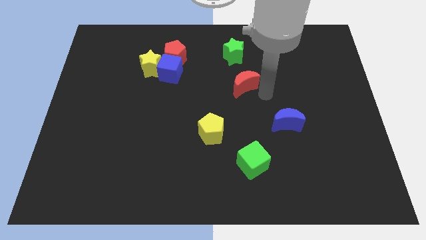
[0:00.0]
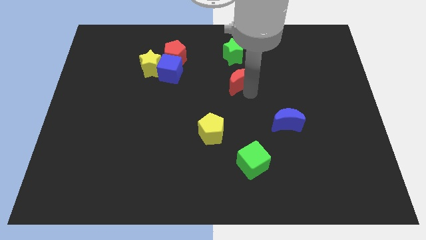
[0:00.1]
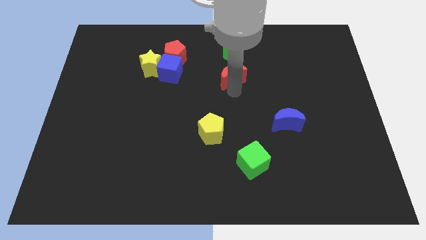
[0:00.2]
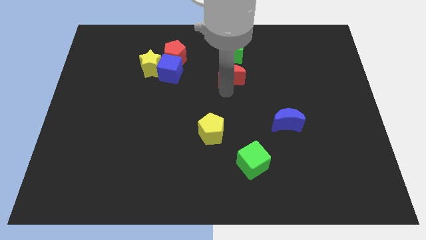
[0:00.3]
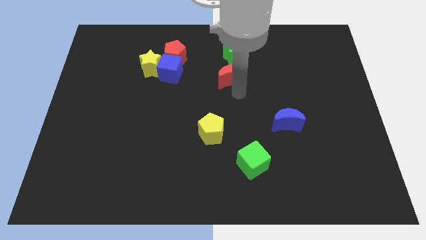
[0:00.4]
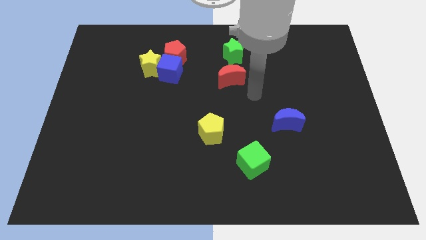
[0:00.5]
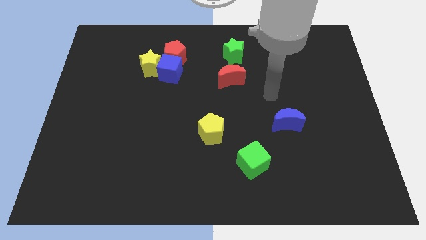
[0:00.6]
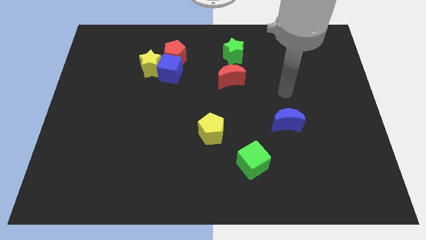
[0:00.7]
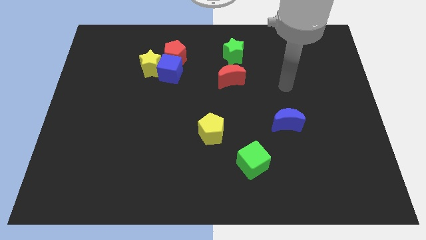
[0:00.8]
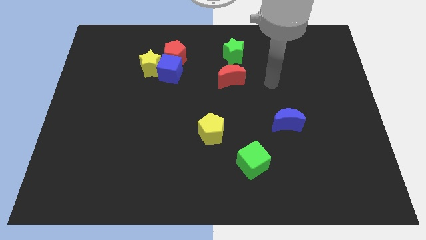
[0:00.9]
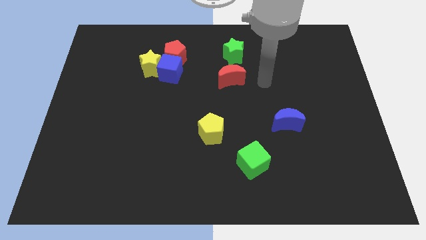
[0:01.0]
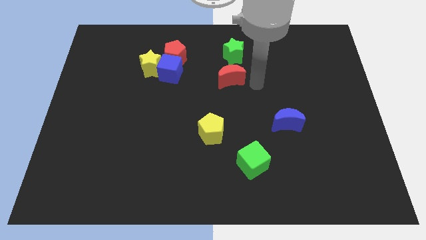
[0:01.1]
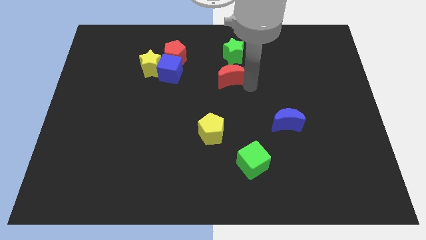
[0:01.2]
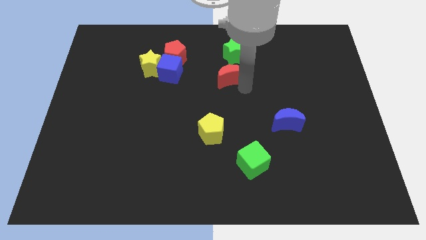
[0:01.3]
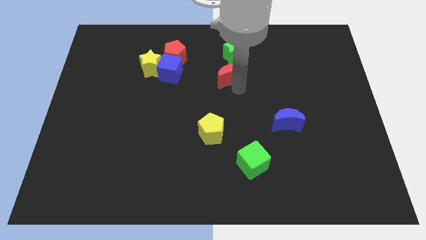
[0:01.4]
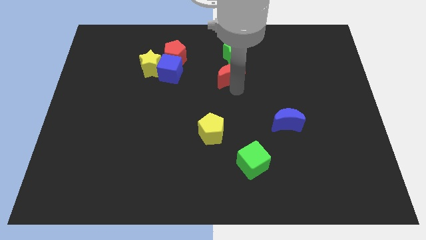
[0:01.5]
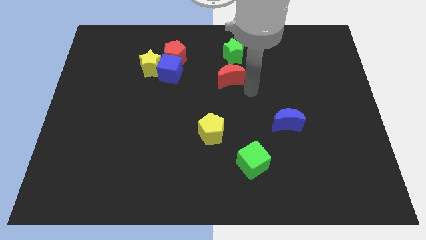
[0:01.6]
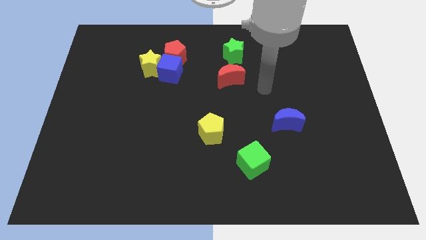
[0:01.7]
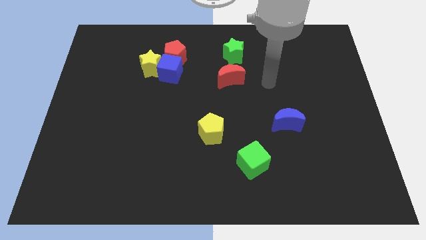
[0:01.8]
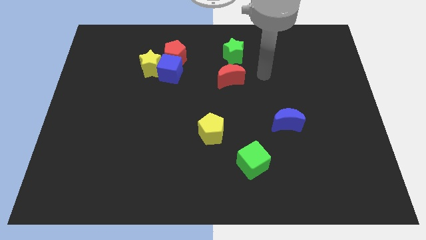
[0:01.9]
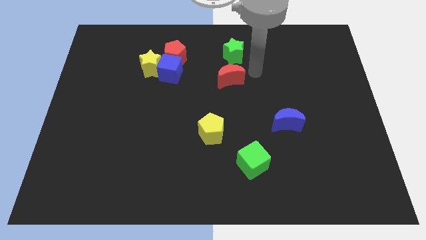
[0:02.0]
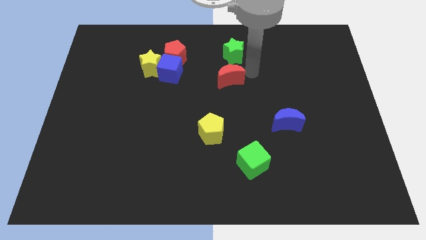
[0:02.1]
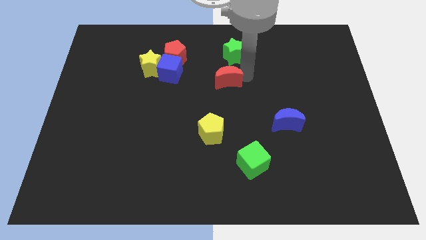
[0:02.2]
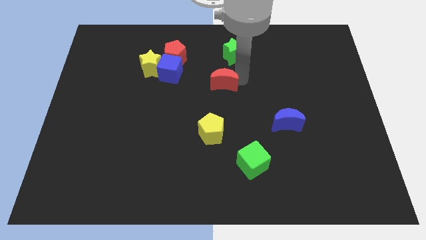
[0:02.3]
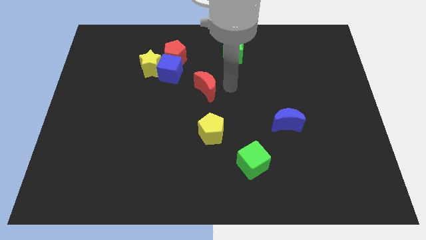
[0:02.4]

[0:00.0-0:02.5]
place red crescent above yellow pentagon

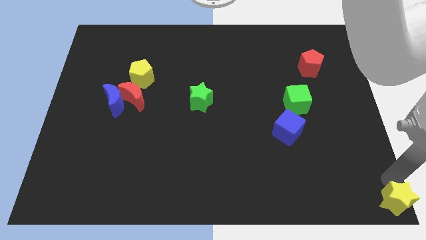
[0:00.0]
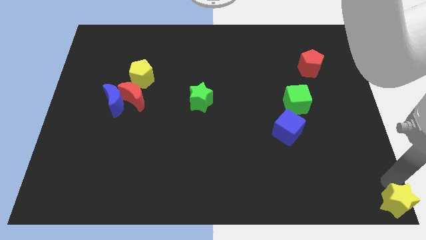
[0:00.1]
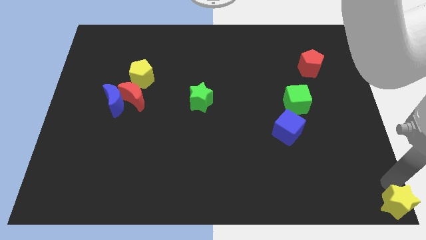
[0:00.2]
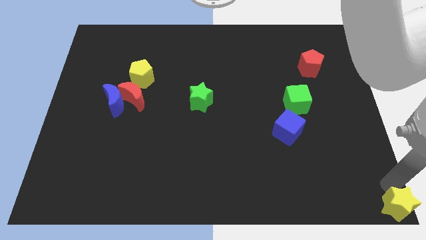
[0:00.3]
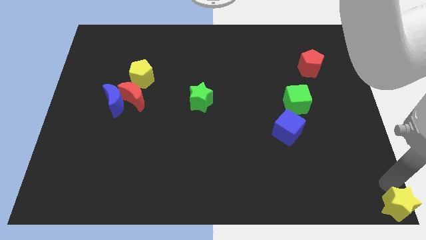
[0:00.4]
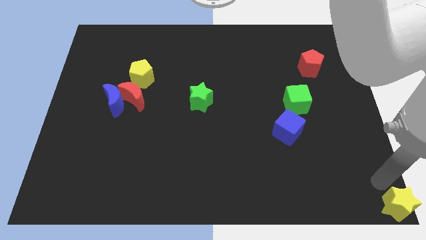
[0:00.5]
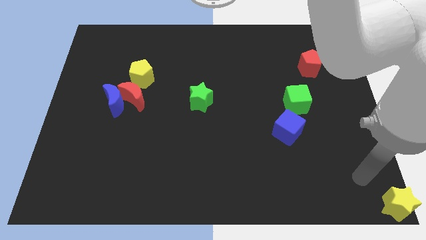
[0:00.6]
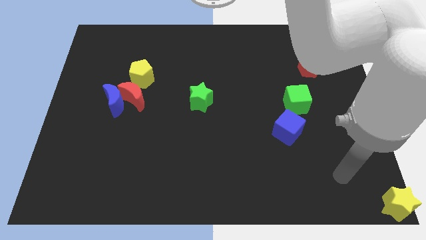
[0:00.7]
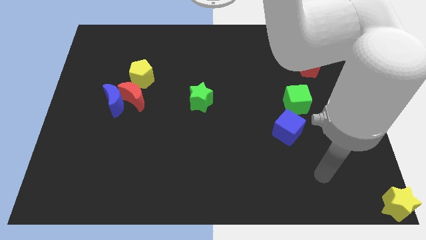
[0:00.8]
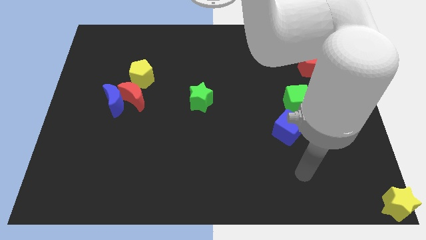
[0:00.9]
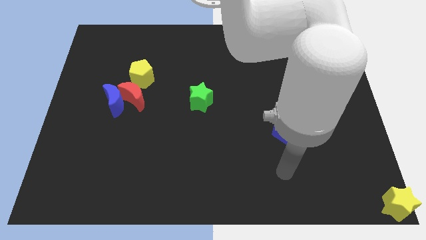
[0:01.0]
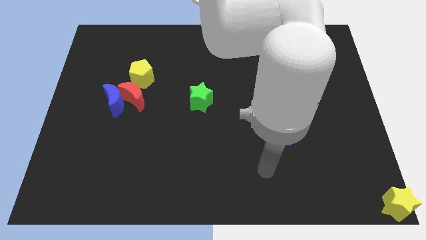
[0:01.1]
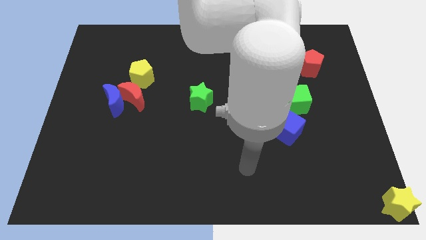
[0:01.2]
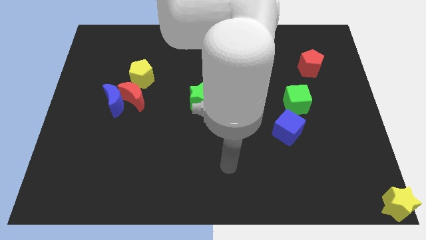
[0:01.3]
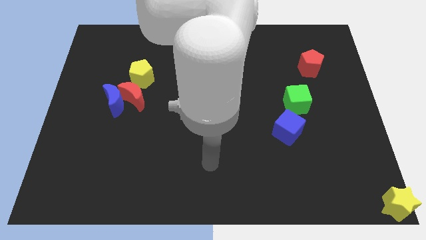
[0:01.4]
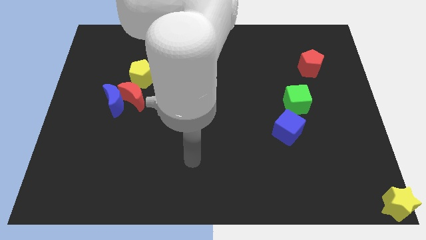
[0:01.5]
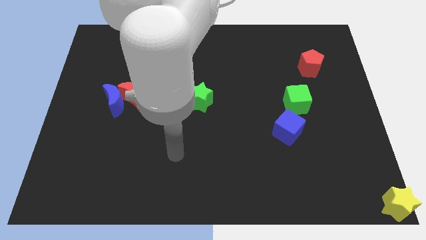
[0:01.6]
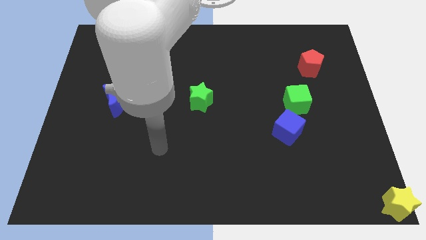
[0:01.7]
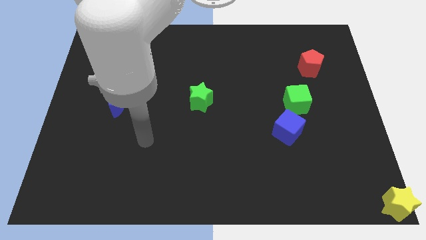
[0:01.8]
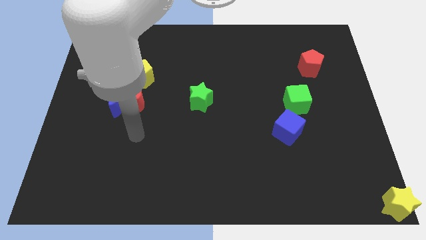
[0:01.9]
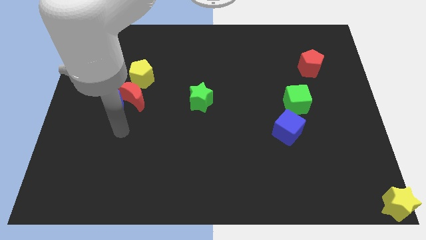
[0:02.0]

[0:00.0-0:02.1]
place the yellow star to the bottom right corner

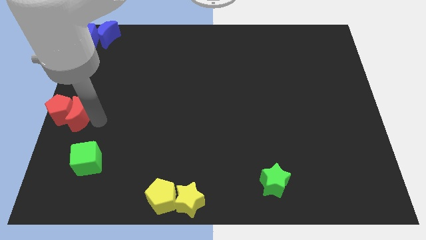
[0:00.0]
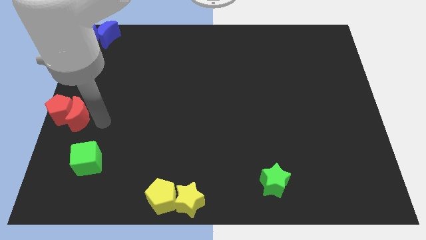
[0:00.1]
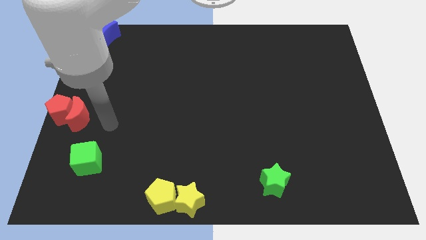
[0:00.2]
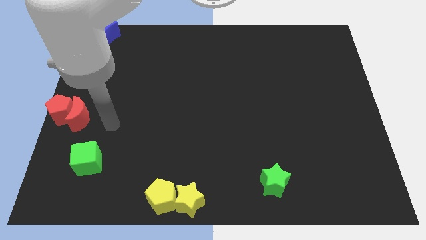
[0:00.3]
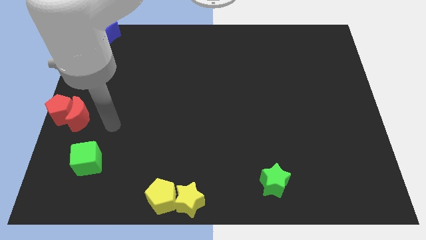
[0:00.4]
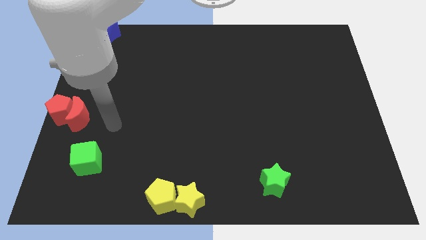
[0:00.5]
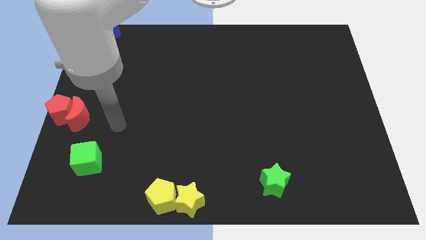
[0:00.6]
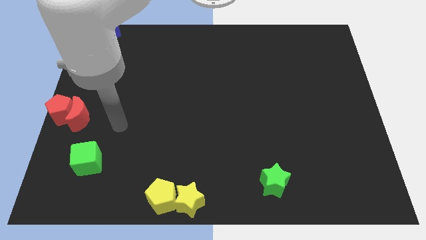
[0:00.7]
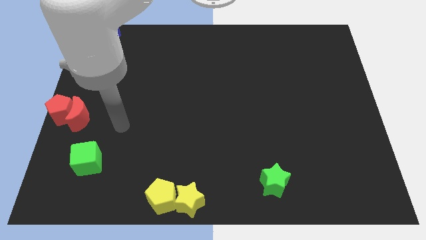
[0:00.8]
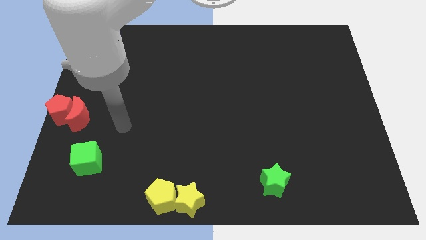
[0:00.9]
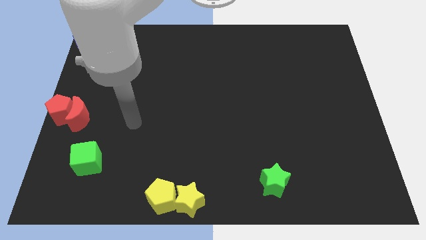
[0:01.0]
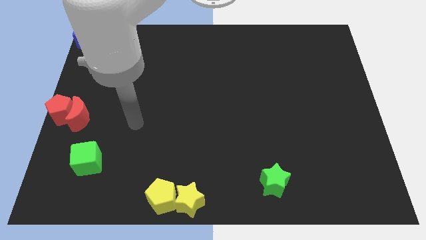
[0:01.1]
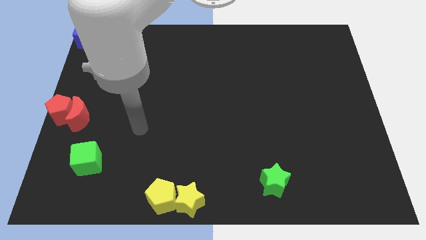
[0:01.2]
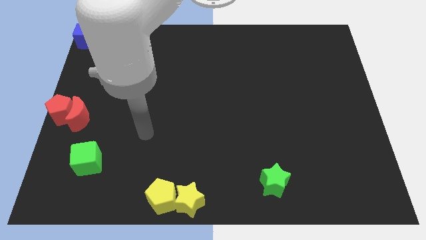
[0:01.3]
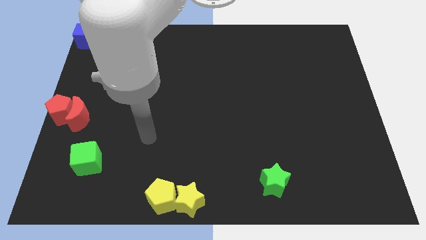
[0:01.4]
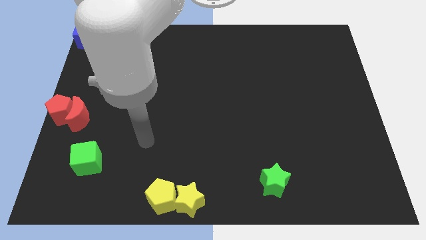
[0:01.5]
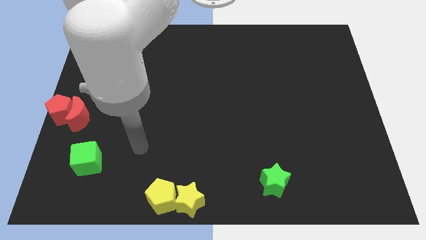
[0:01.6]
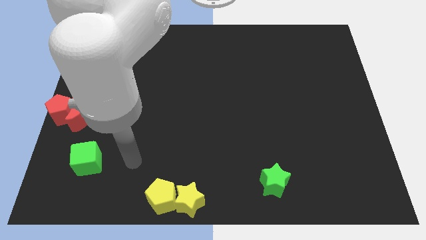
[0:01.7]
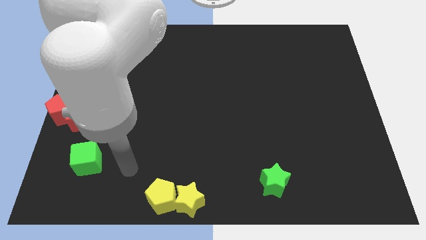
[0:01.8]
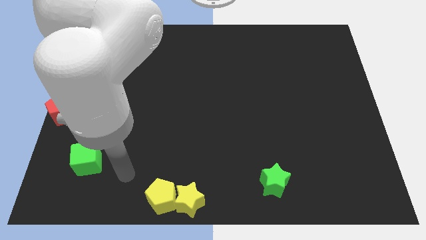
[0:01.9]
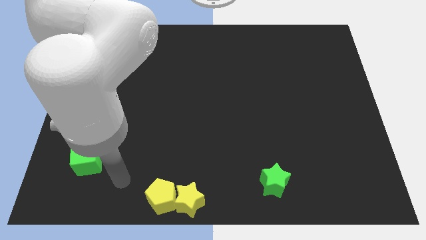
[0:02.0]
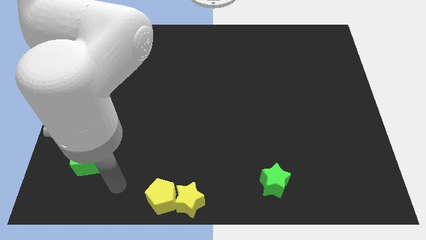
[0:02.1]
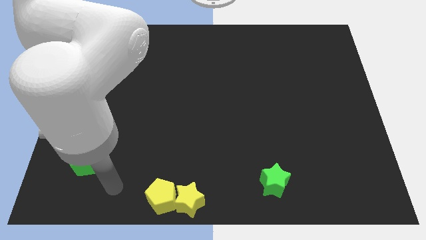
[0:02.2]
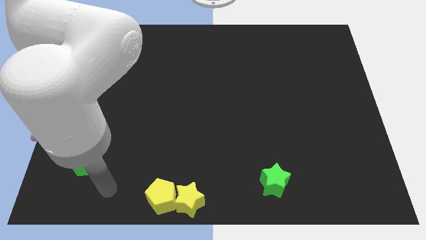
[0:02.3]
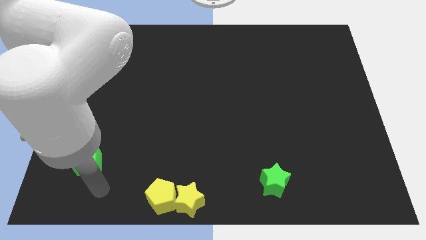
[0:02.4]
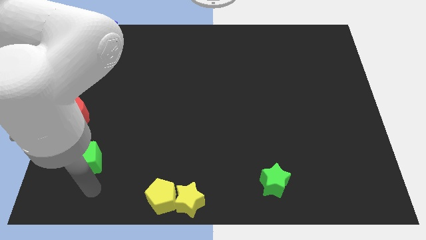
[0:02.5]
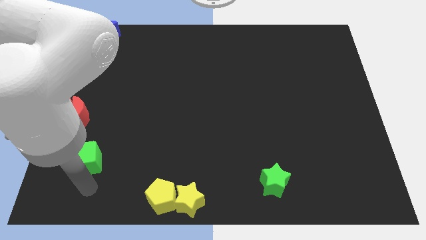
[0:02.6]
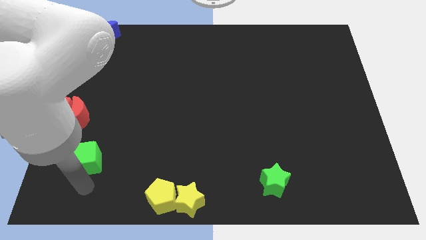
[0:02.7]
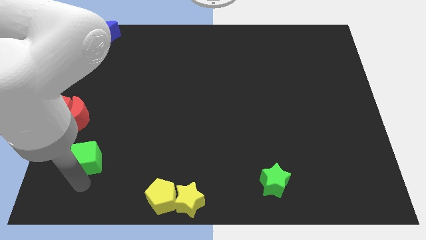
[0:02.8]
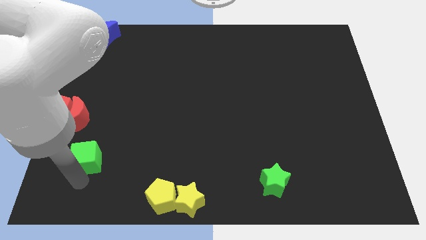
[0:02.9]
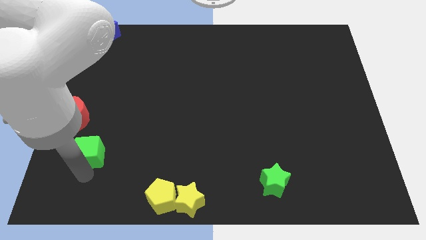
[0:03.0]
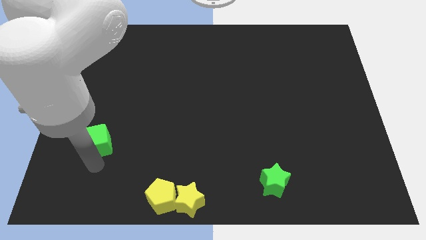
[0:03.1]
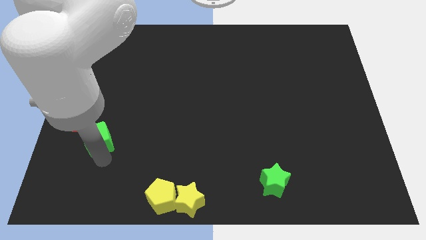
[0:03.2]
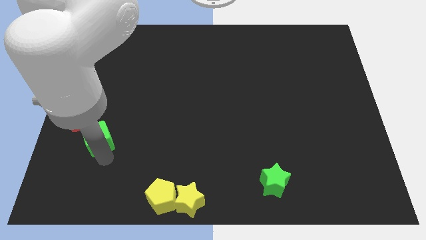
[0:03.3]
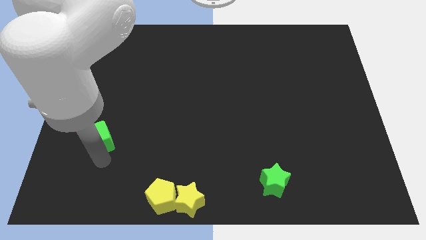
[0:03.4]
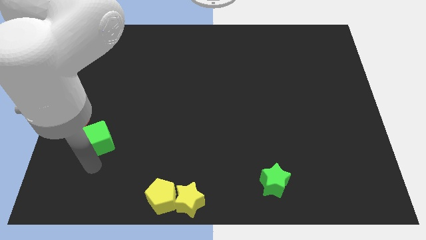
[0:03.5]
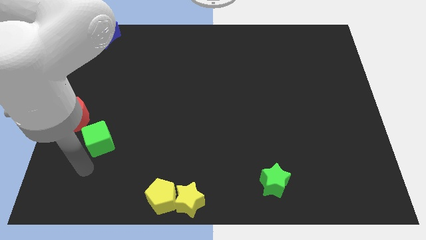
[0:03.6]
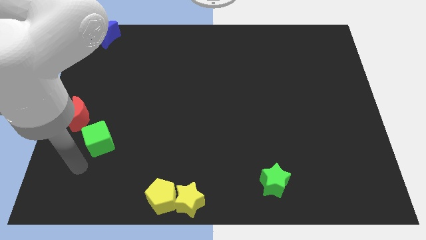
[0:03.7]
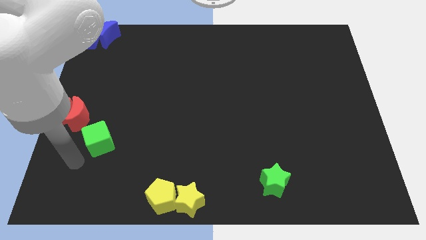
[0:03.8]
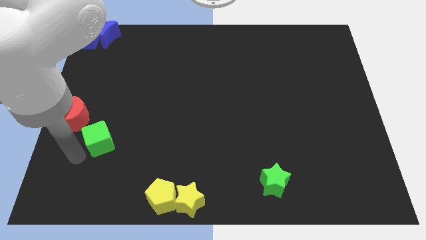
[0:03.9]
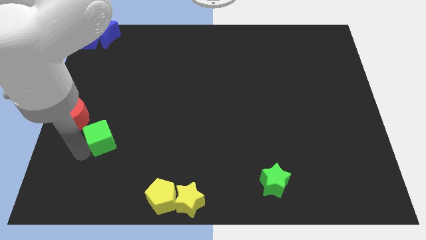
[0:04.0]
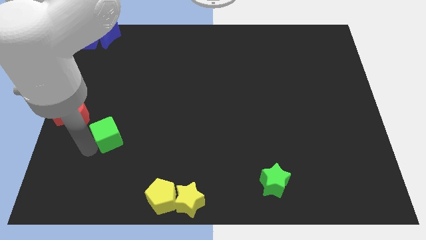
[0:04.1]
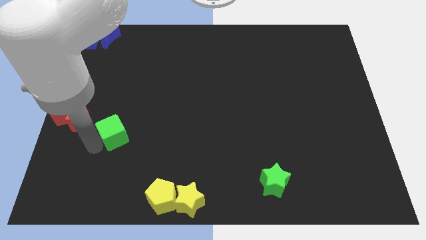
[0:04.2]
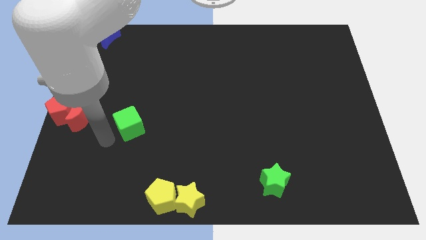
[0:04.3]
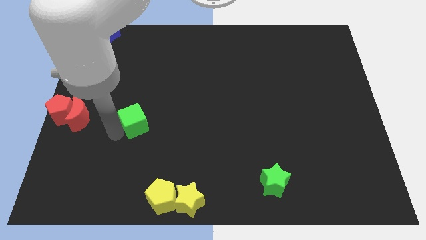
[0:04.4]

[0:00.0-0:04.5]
slide the green cube parallel right to the red moon
